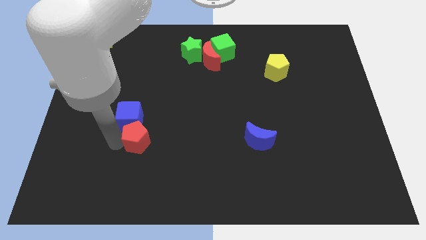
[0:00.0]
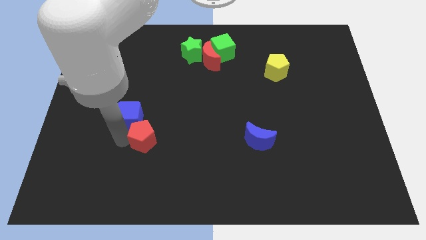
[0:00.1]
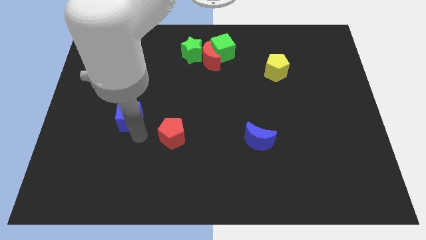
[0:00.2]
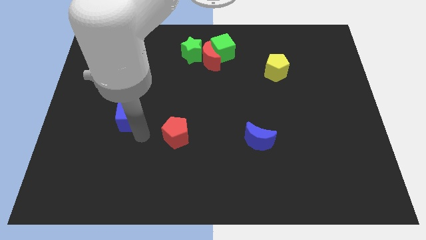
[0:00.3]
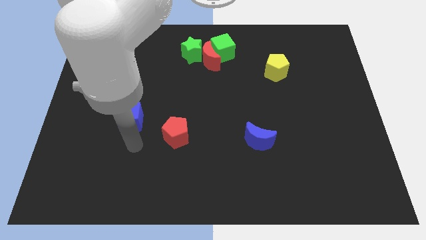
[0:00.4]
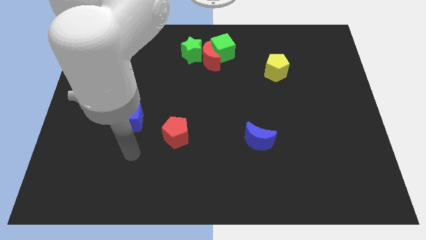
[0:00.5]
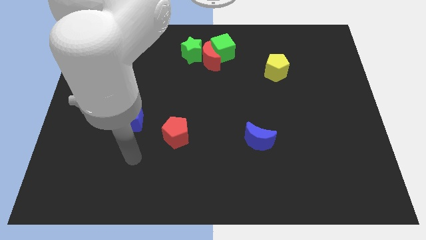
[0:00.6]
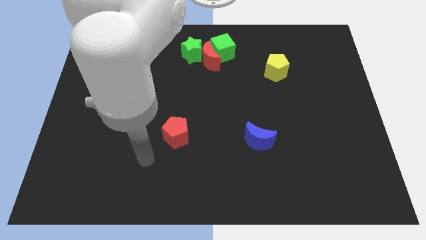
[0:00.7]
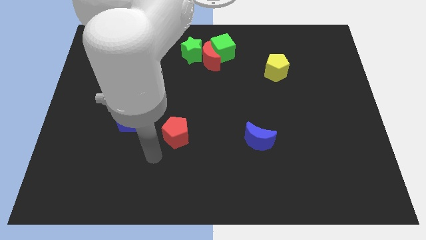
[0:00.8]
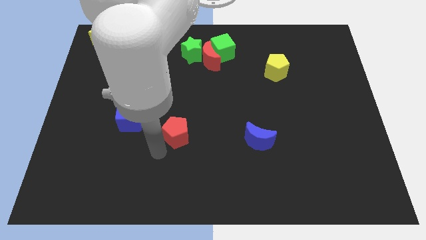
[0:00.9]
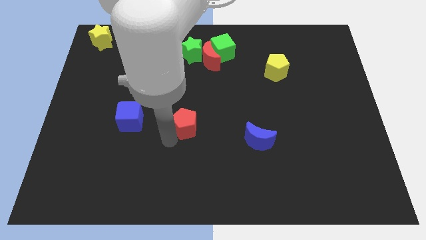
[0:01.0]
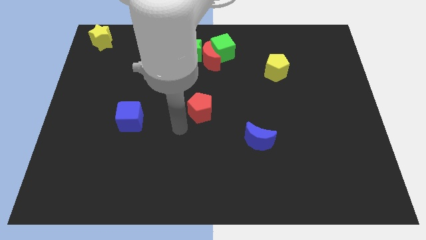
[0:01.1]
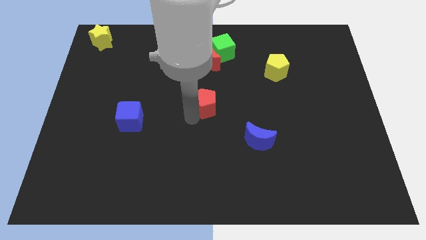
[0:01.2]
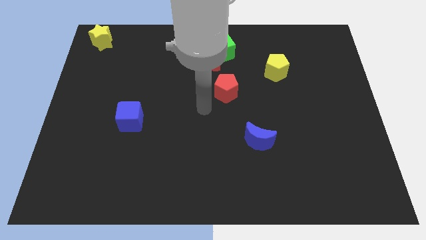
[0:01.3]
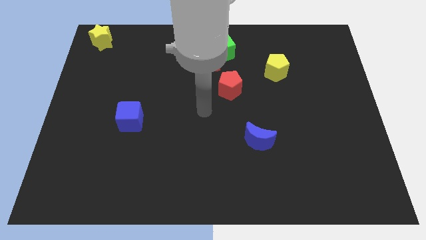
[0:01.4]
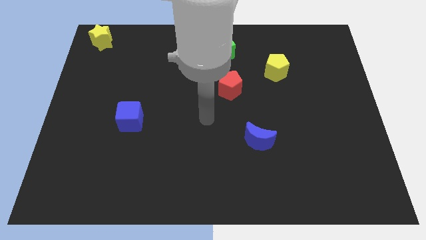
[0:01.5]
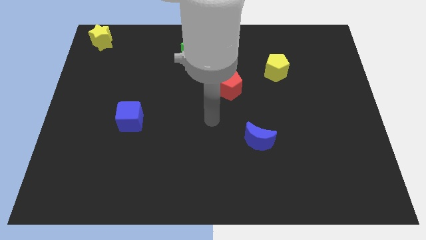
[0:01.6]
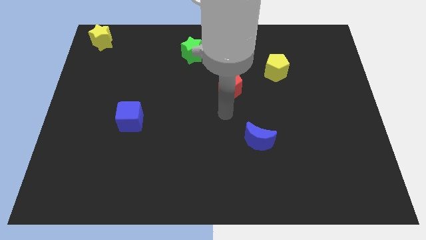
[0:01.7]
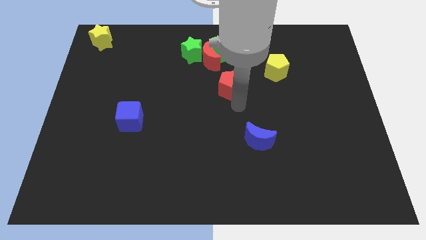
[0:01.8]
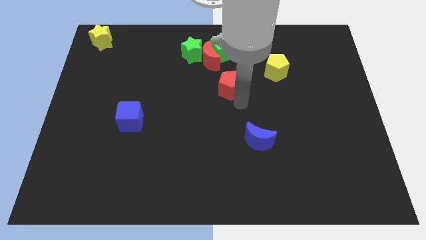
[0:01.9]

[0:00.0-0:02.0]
move the red pentagon diagonal below the red moon

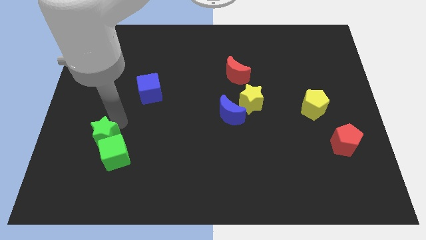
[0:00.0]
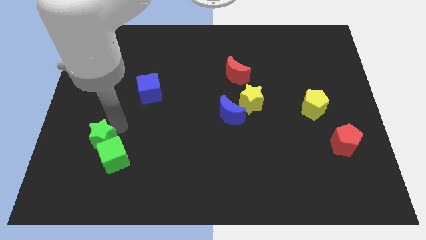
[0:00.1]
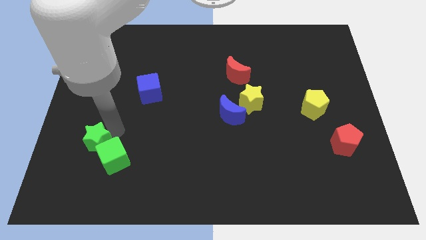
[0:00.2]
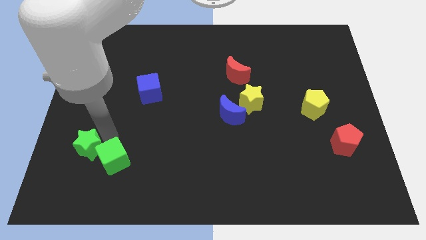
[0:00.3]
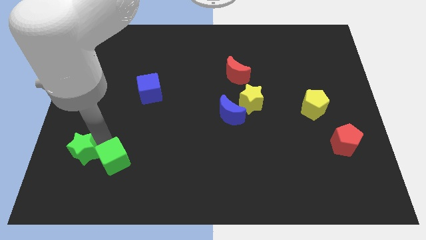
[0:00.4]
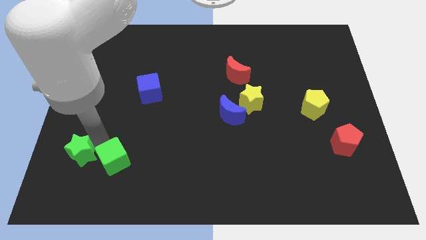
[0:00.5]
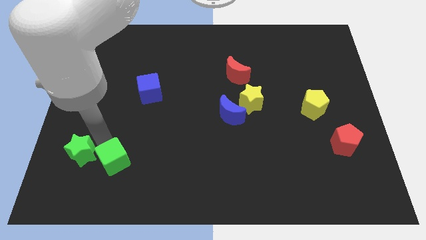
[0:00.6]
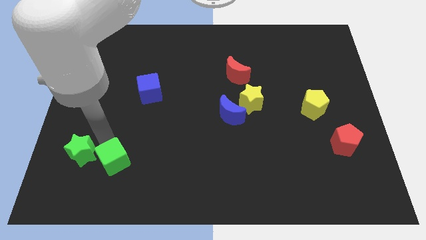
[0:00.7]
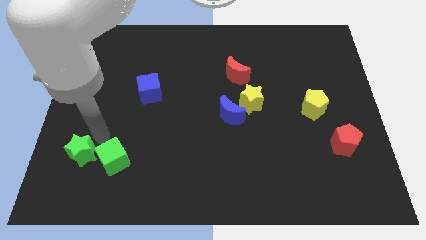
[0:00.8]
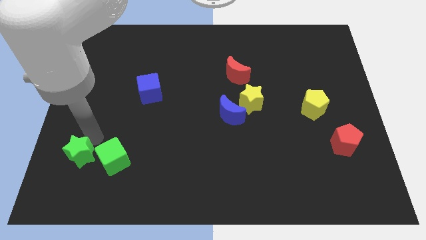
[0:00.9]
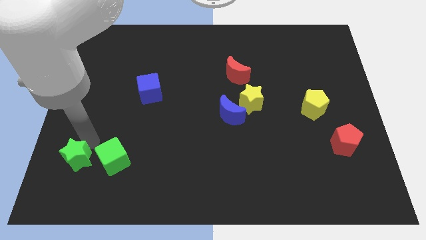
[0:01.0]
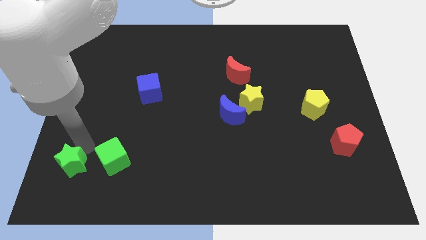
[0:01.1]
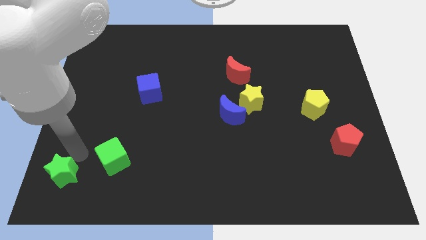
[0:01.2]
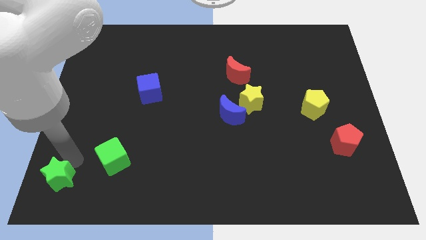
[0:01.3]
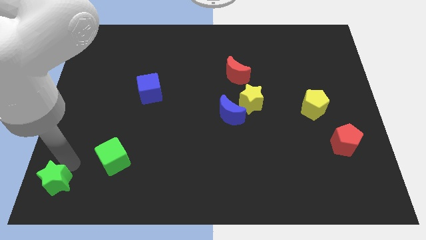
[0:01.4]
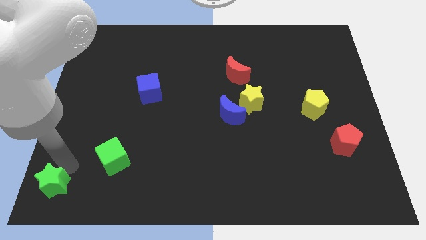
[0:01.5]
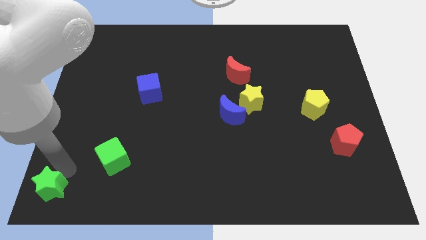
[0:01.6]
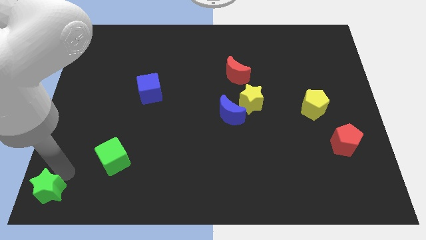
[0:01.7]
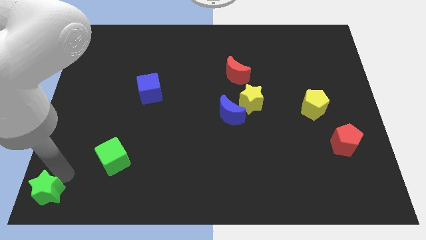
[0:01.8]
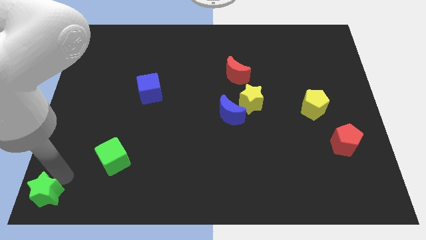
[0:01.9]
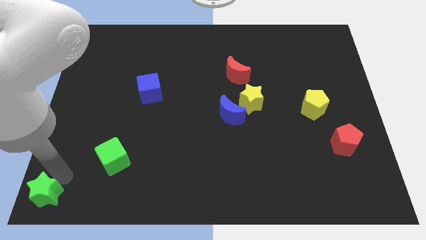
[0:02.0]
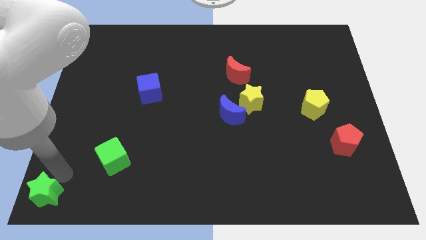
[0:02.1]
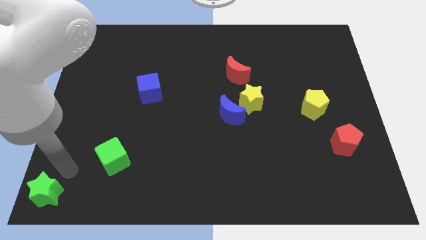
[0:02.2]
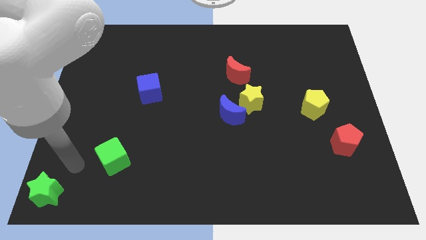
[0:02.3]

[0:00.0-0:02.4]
move the green star to the bottom left corner

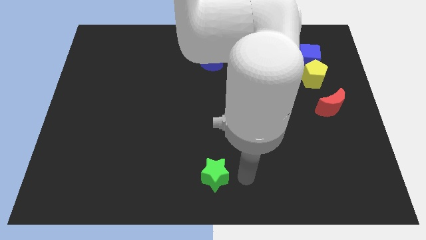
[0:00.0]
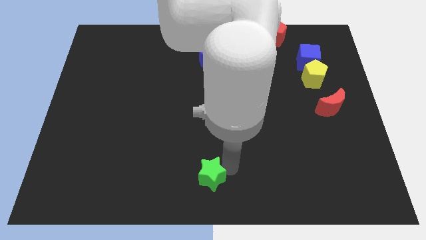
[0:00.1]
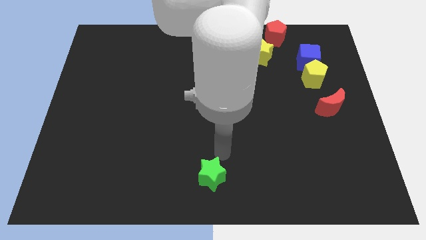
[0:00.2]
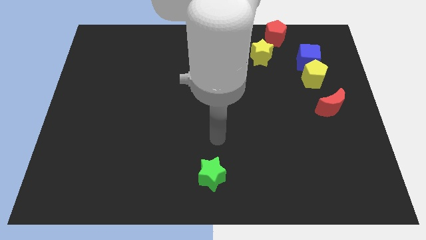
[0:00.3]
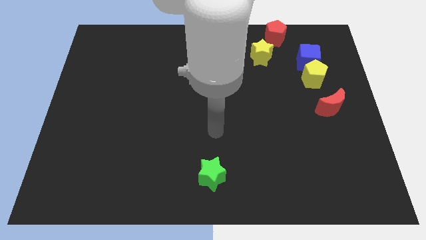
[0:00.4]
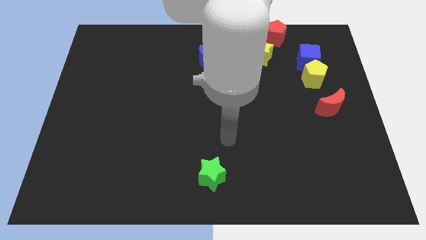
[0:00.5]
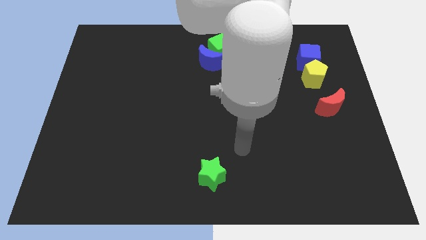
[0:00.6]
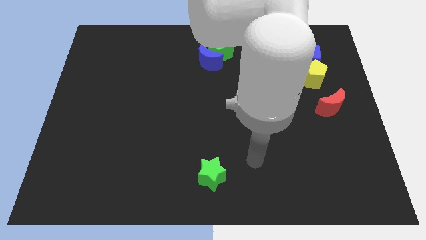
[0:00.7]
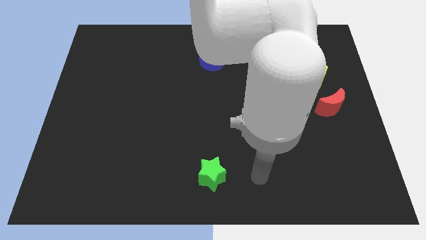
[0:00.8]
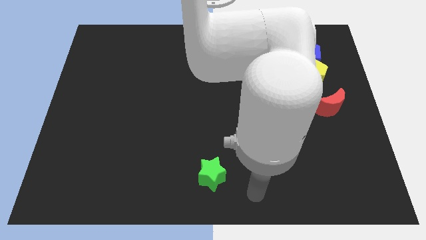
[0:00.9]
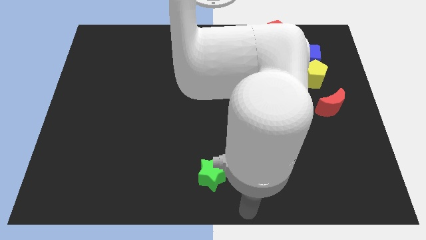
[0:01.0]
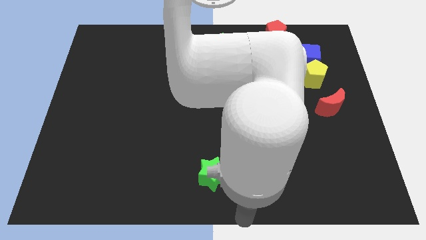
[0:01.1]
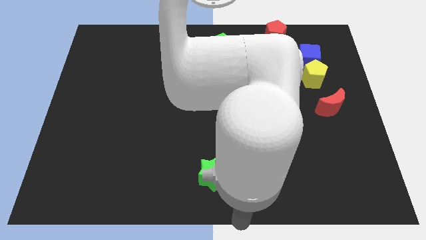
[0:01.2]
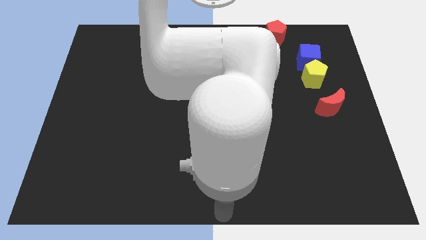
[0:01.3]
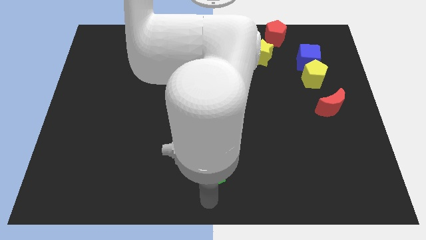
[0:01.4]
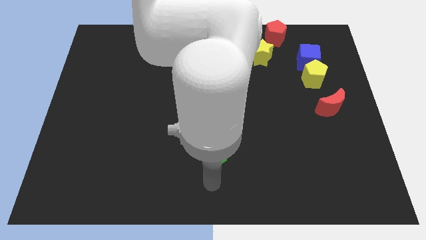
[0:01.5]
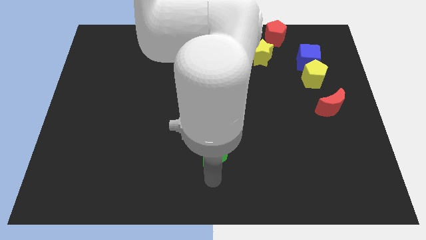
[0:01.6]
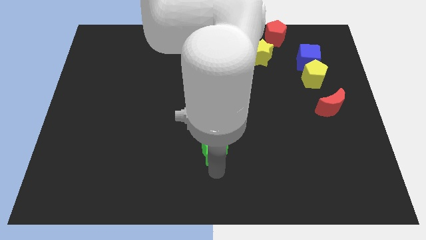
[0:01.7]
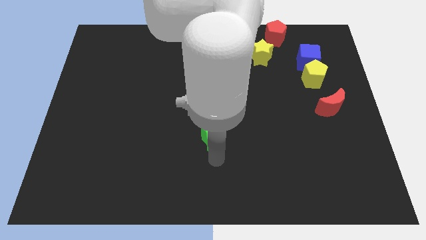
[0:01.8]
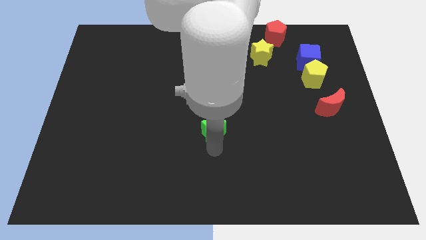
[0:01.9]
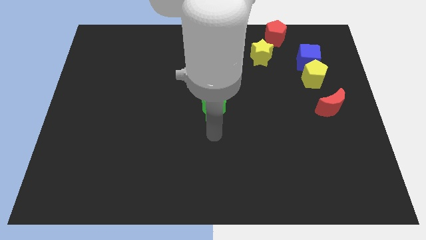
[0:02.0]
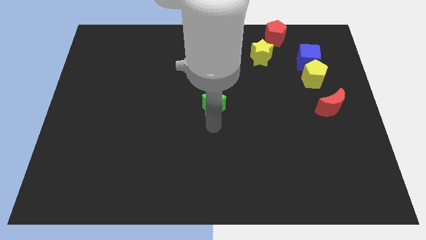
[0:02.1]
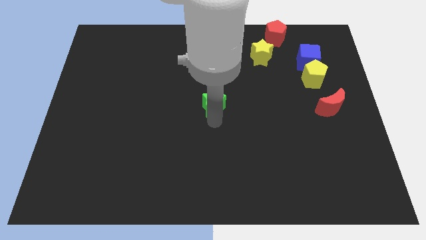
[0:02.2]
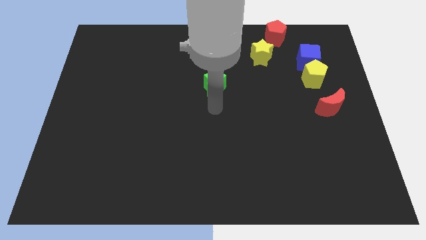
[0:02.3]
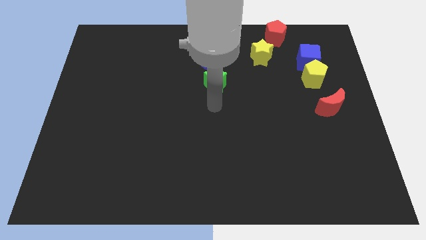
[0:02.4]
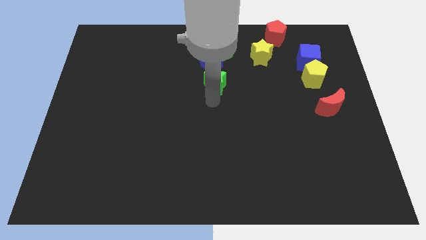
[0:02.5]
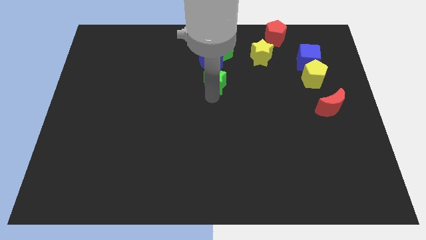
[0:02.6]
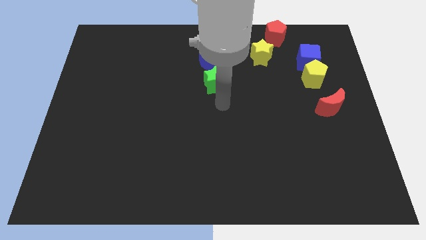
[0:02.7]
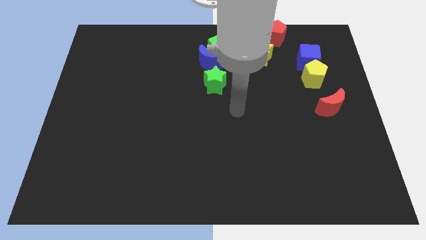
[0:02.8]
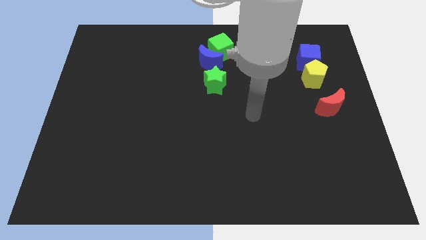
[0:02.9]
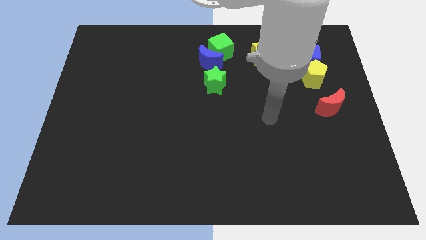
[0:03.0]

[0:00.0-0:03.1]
place green star parallel to yellow pentagon

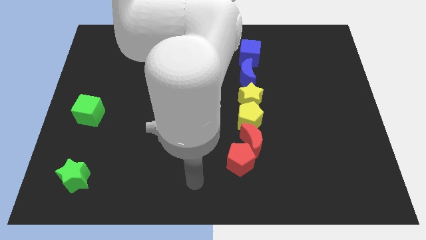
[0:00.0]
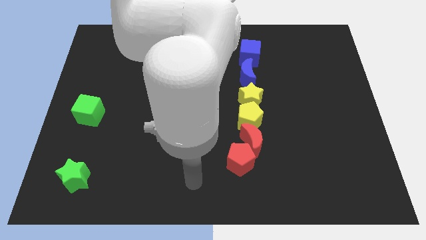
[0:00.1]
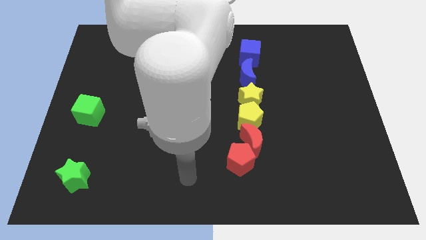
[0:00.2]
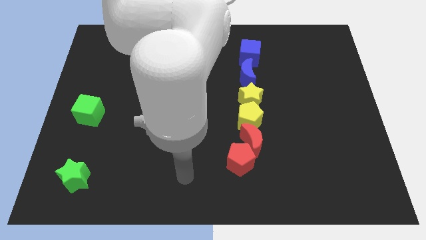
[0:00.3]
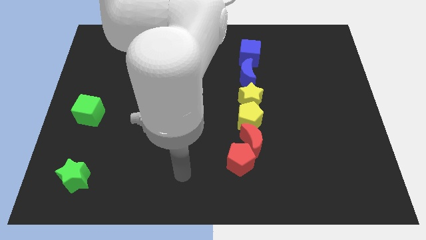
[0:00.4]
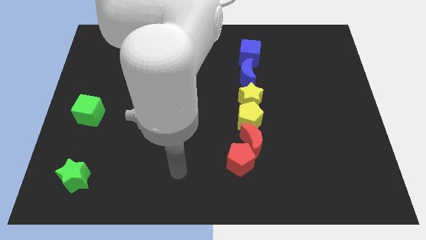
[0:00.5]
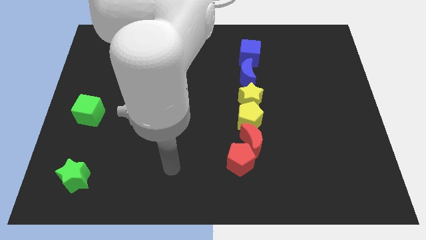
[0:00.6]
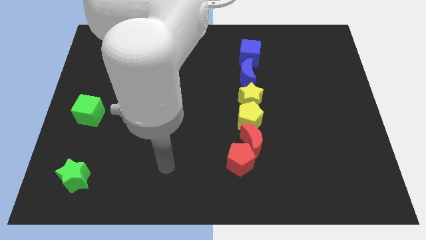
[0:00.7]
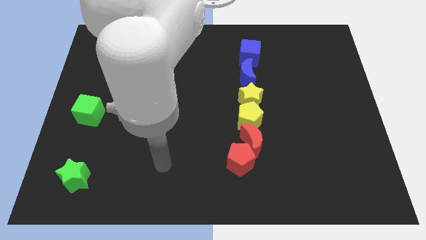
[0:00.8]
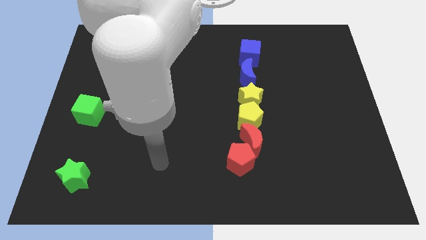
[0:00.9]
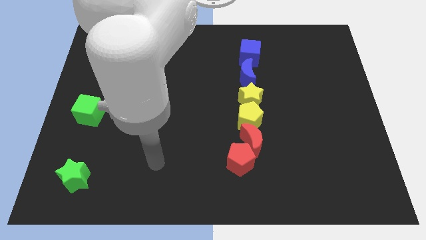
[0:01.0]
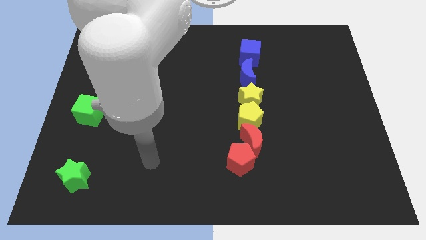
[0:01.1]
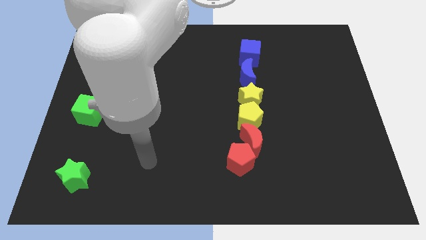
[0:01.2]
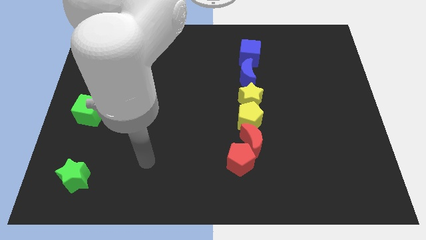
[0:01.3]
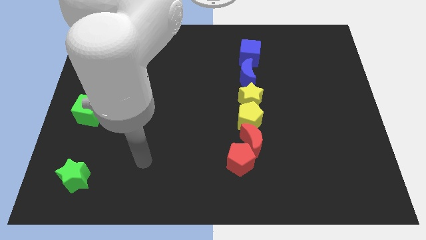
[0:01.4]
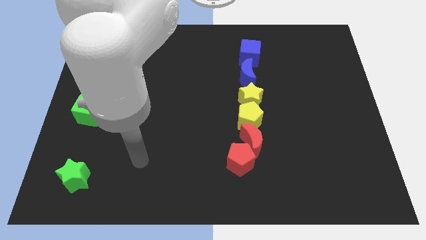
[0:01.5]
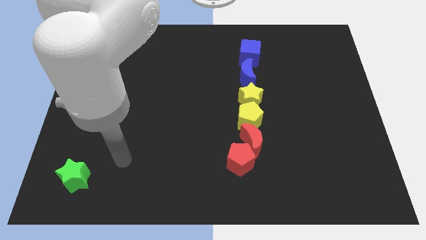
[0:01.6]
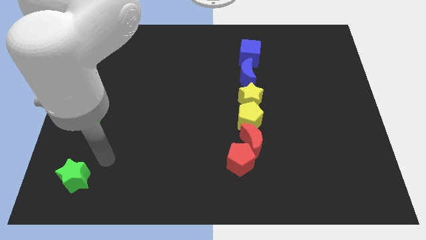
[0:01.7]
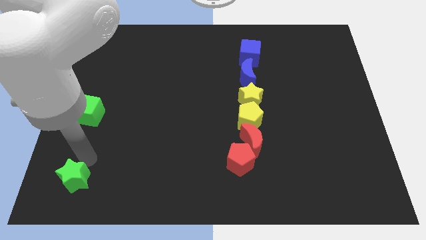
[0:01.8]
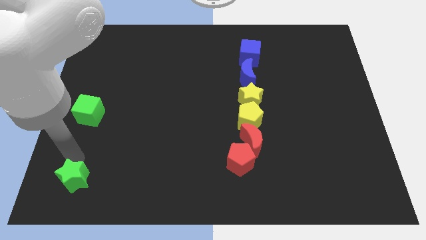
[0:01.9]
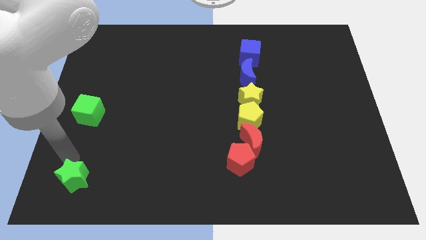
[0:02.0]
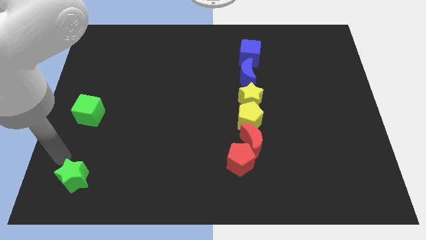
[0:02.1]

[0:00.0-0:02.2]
place your arm top of the green star
